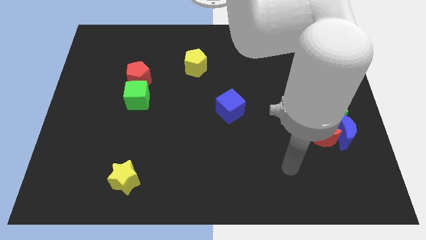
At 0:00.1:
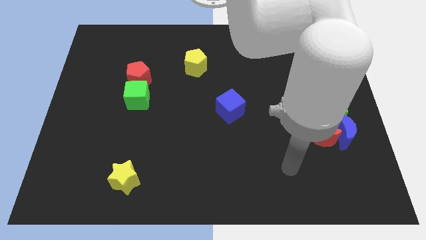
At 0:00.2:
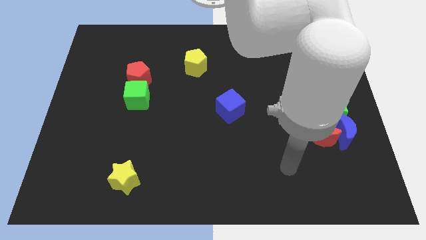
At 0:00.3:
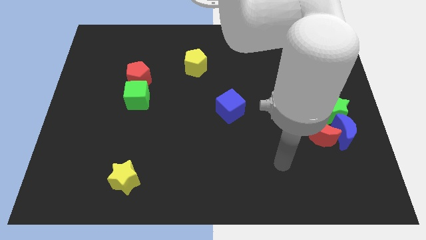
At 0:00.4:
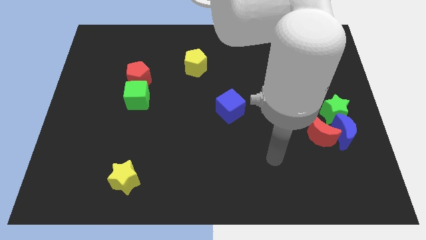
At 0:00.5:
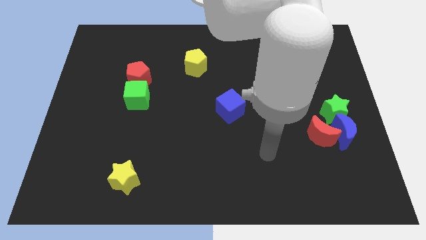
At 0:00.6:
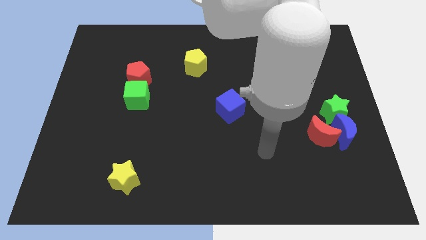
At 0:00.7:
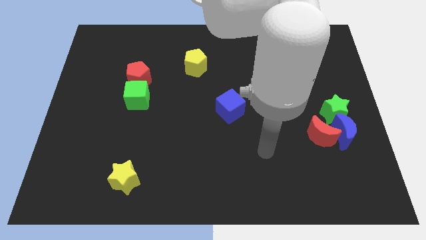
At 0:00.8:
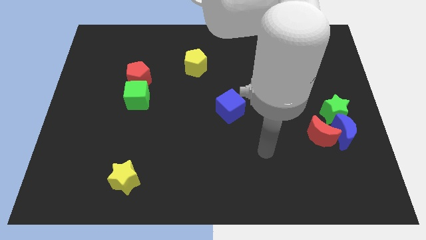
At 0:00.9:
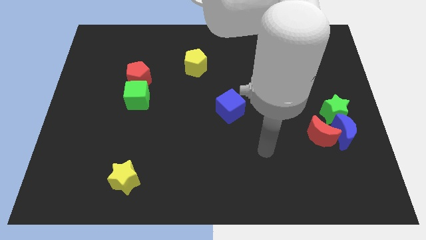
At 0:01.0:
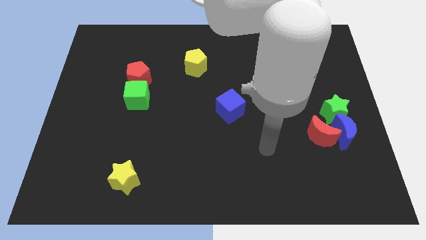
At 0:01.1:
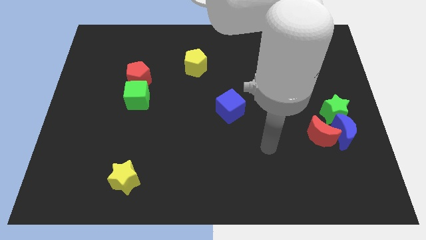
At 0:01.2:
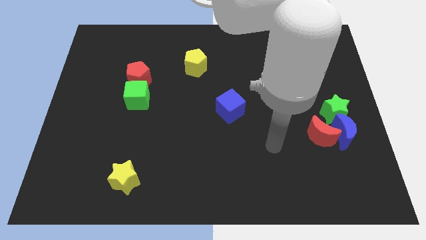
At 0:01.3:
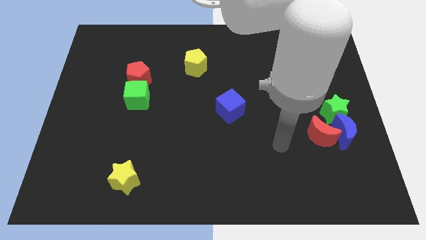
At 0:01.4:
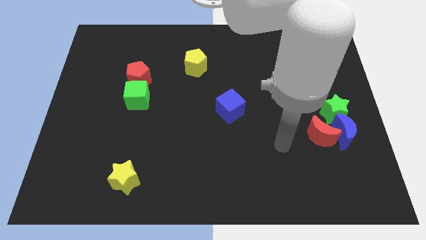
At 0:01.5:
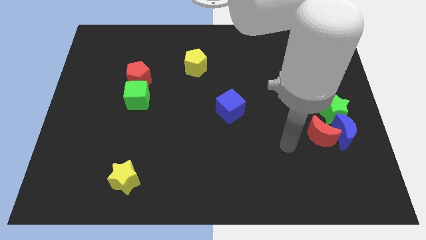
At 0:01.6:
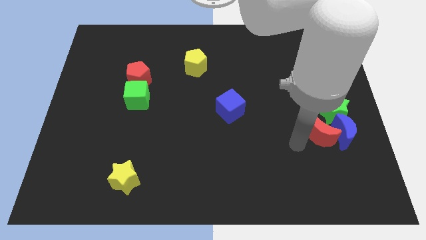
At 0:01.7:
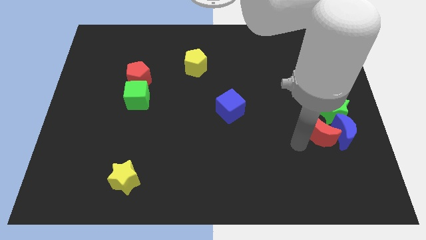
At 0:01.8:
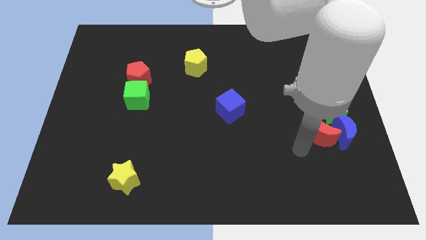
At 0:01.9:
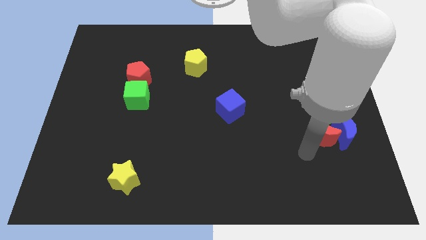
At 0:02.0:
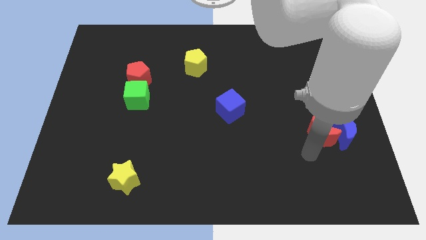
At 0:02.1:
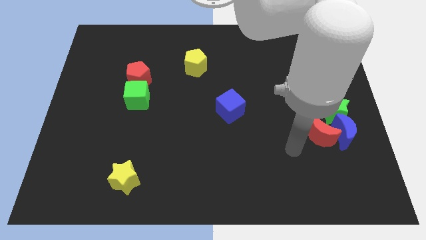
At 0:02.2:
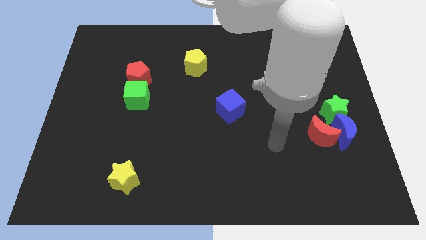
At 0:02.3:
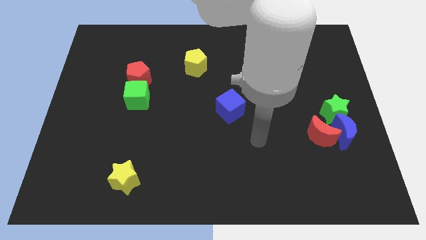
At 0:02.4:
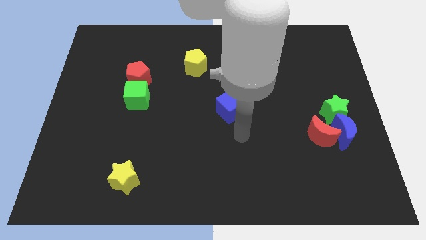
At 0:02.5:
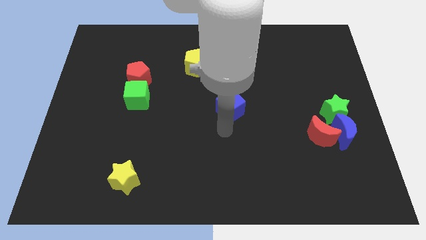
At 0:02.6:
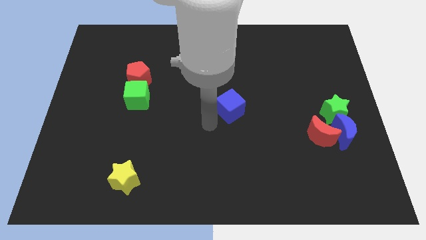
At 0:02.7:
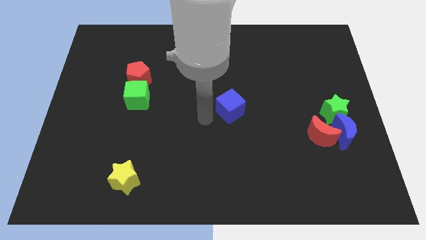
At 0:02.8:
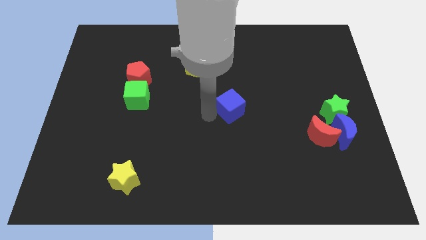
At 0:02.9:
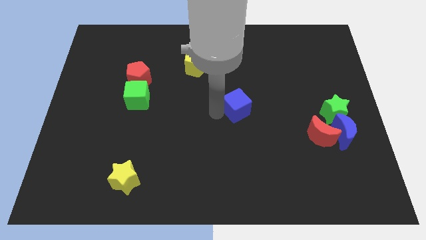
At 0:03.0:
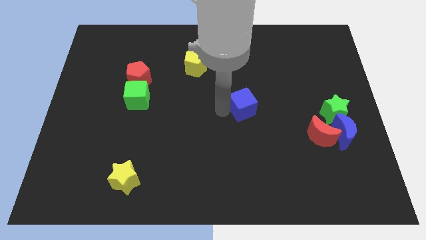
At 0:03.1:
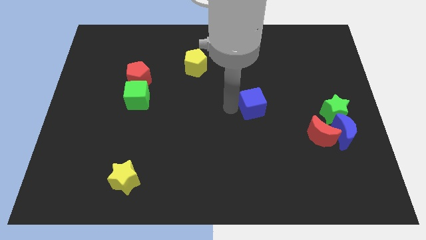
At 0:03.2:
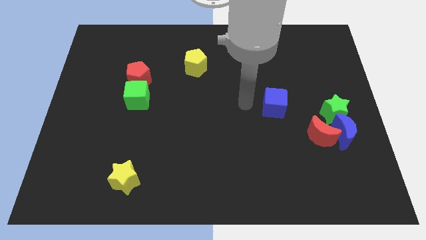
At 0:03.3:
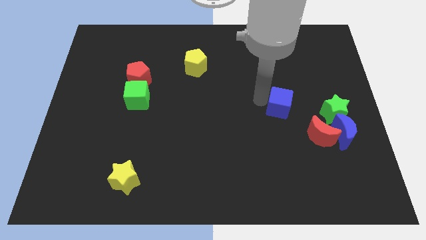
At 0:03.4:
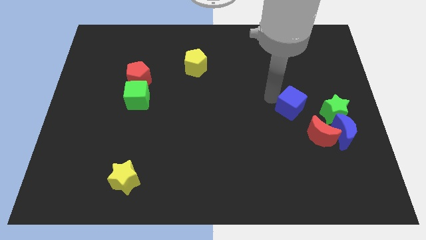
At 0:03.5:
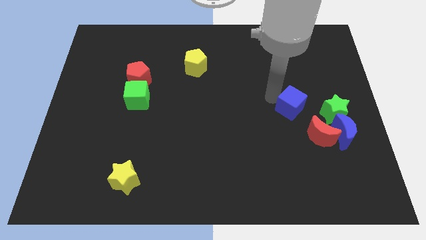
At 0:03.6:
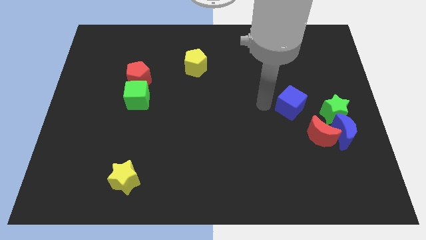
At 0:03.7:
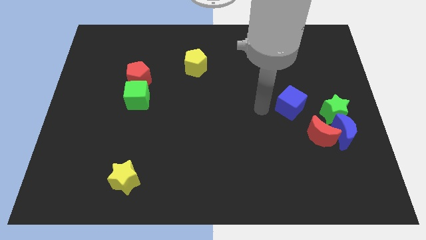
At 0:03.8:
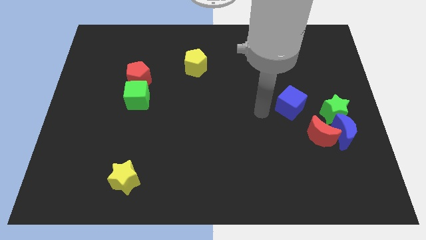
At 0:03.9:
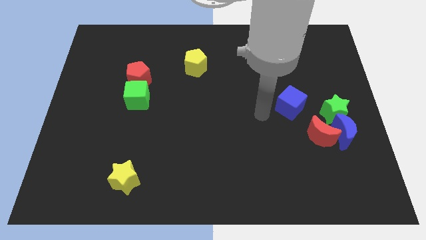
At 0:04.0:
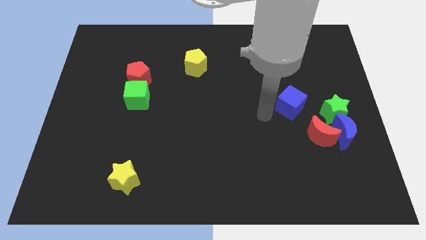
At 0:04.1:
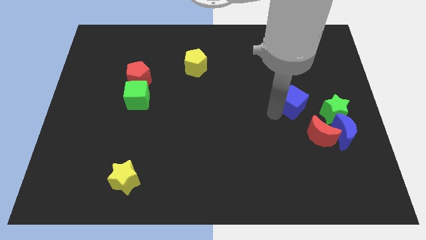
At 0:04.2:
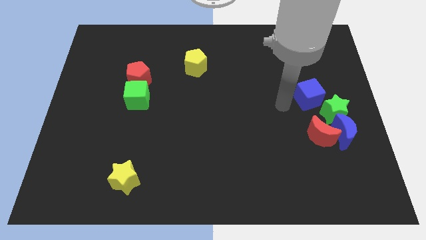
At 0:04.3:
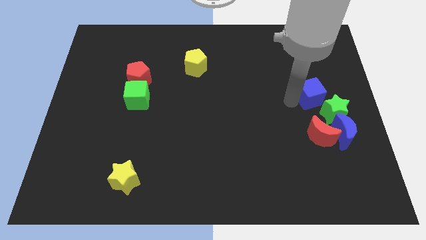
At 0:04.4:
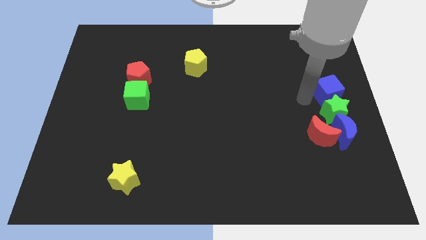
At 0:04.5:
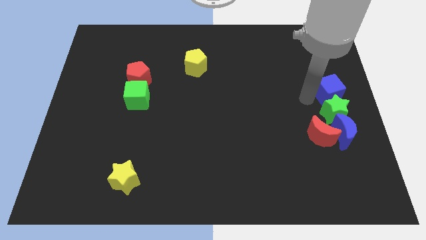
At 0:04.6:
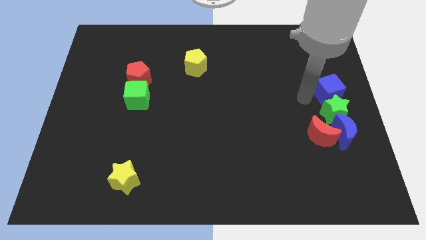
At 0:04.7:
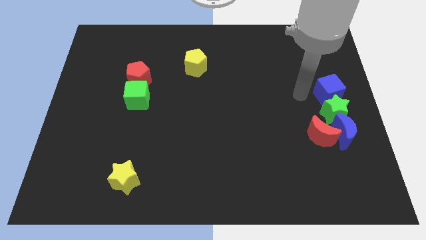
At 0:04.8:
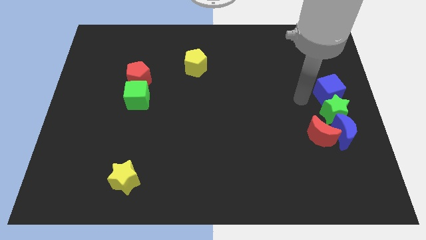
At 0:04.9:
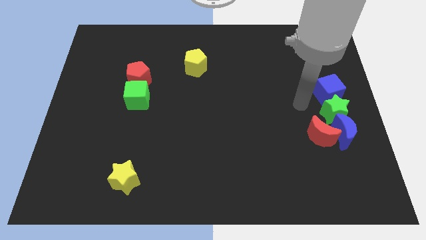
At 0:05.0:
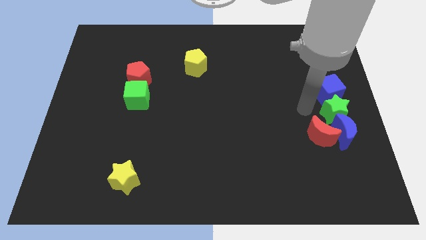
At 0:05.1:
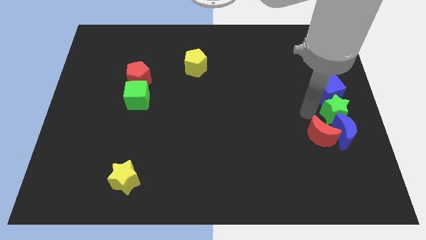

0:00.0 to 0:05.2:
move the blue cube to the right of the board

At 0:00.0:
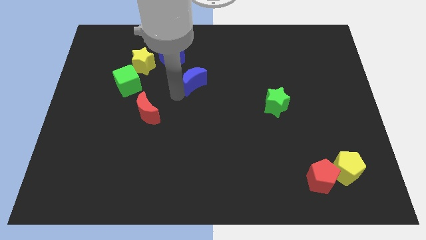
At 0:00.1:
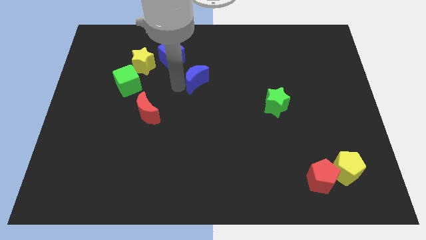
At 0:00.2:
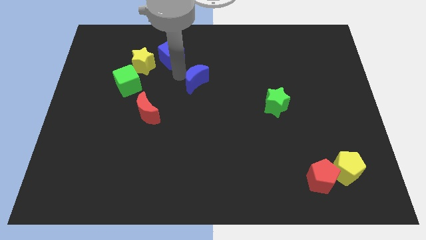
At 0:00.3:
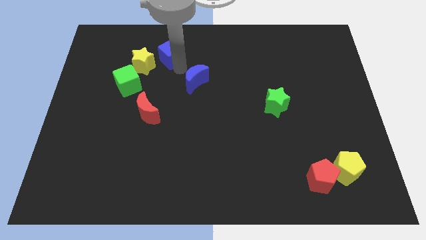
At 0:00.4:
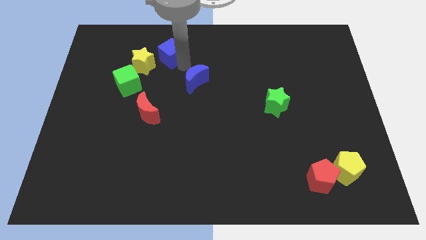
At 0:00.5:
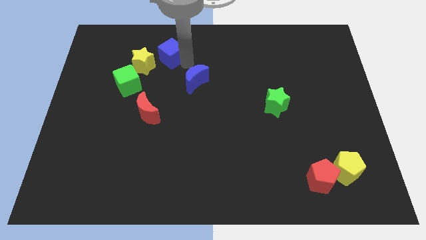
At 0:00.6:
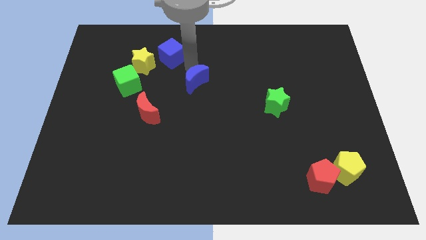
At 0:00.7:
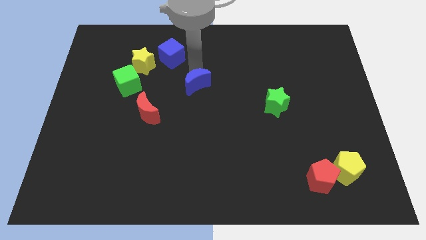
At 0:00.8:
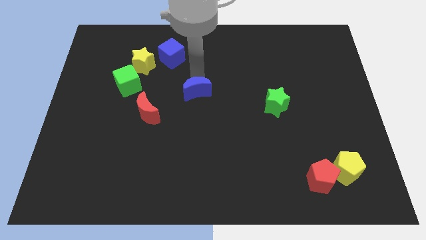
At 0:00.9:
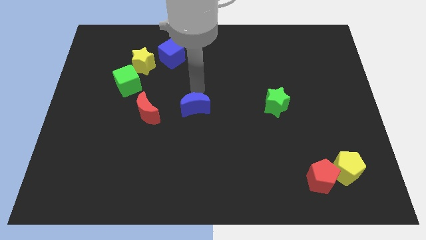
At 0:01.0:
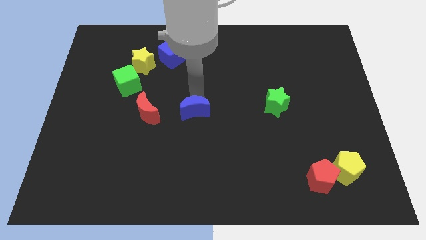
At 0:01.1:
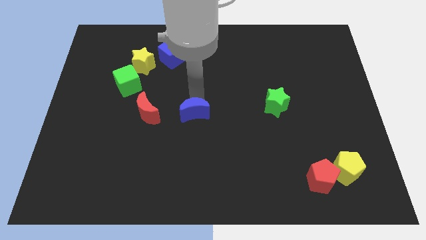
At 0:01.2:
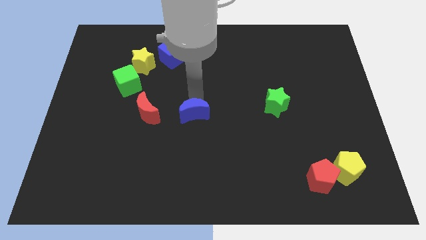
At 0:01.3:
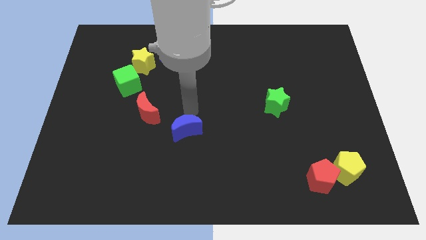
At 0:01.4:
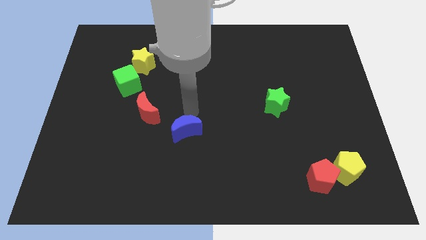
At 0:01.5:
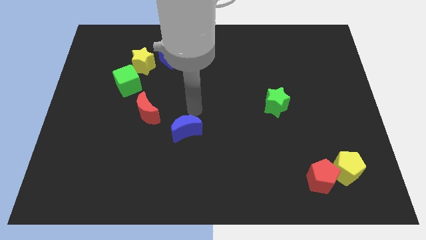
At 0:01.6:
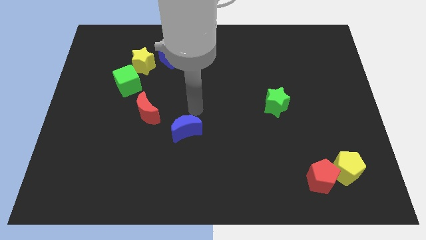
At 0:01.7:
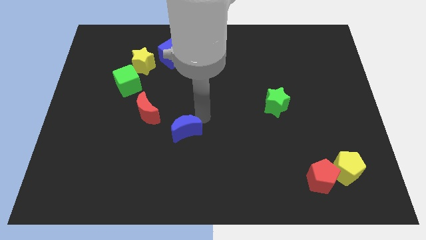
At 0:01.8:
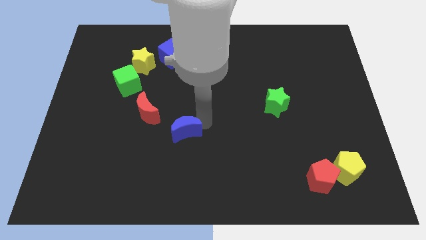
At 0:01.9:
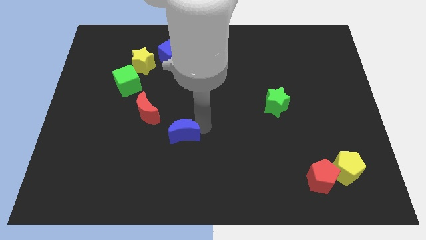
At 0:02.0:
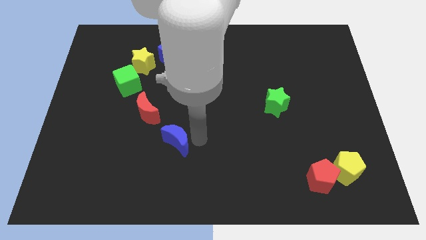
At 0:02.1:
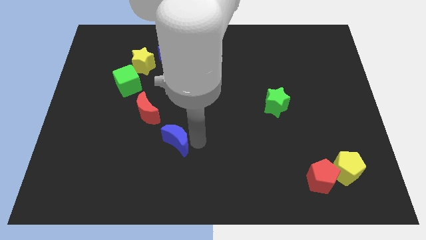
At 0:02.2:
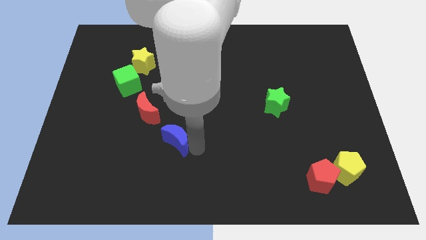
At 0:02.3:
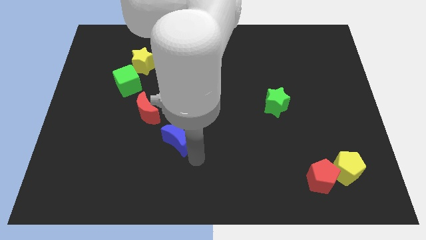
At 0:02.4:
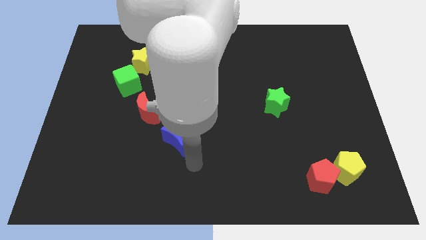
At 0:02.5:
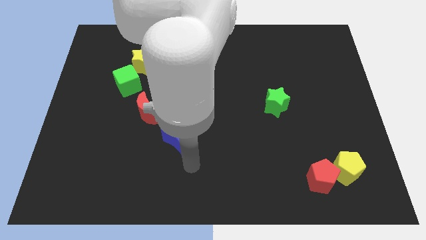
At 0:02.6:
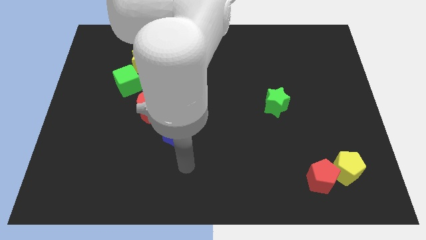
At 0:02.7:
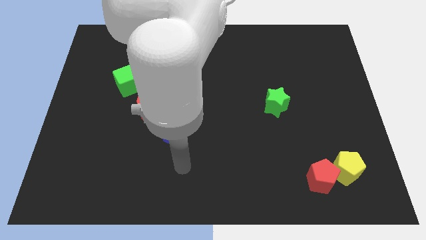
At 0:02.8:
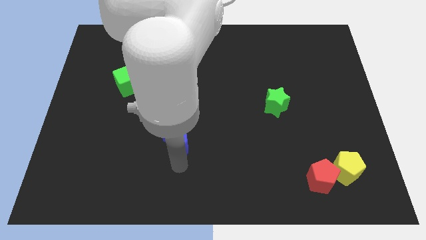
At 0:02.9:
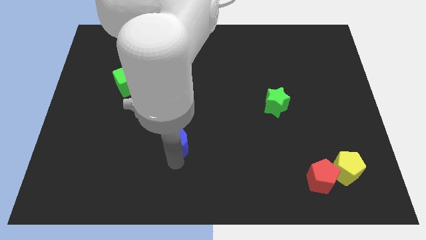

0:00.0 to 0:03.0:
push the blue crescent to the bottom right of the red crescent

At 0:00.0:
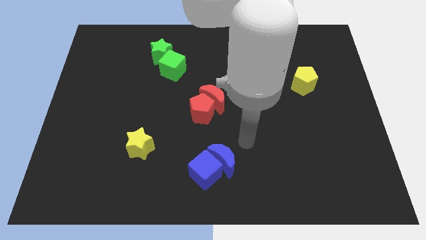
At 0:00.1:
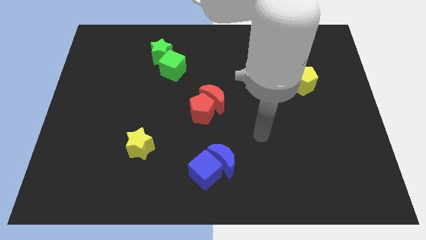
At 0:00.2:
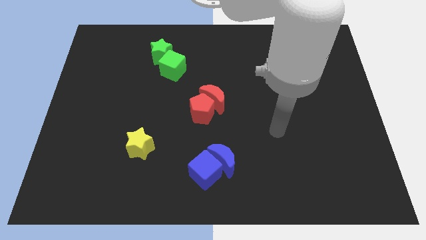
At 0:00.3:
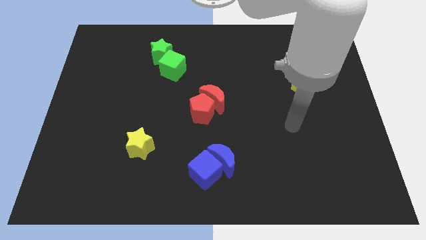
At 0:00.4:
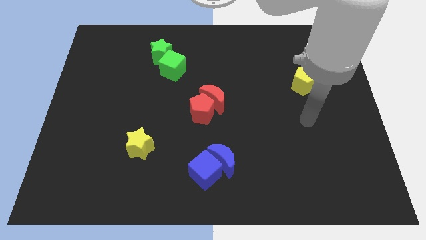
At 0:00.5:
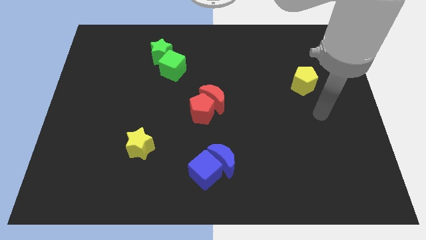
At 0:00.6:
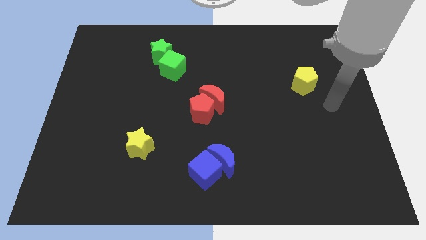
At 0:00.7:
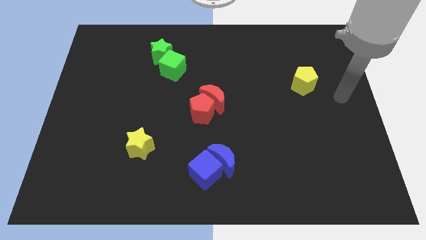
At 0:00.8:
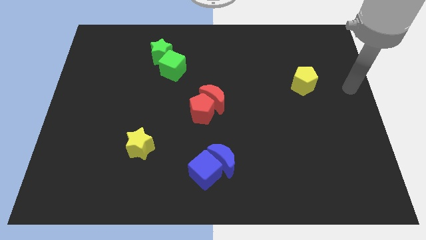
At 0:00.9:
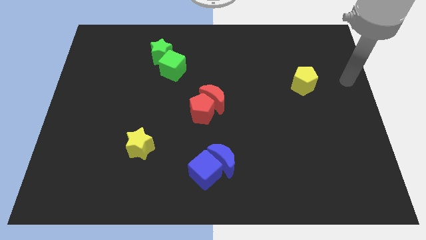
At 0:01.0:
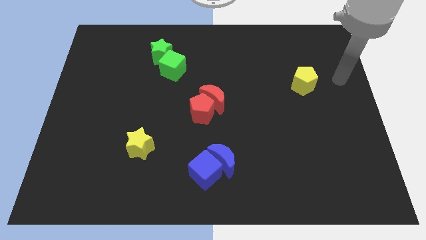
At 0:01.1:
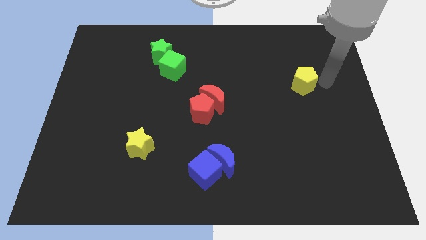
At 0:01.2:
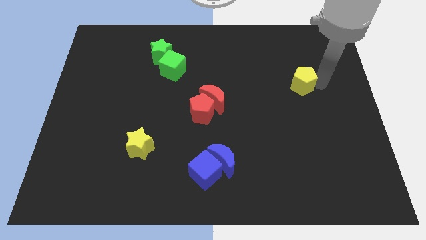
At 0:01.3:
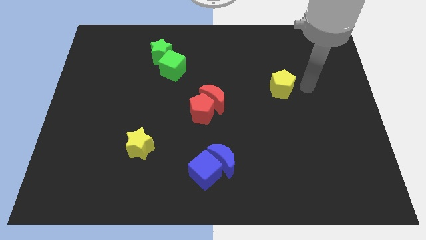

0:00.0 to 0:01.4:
move the hand on the right side of the yellow pentagon
